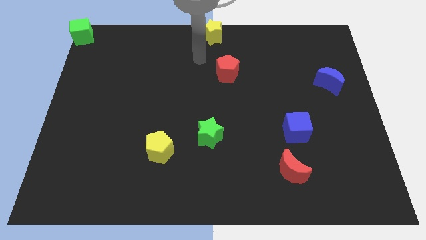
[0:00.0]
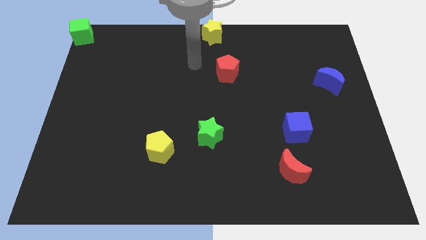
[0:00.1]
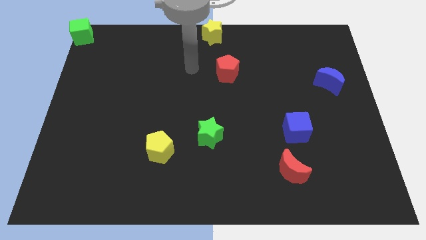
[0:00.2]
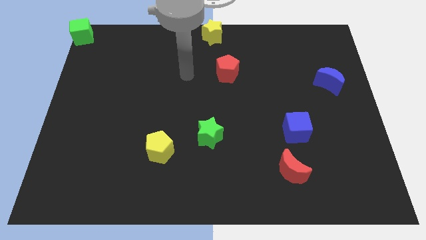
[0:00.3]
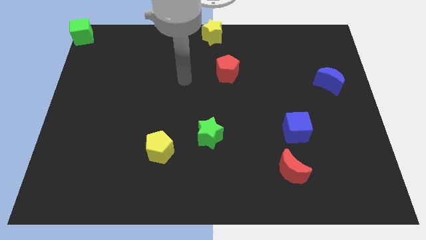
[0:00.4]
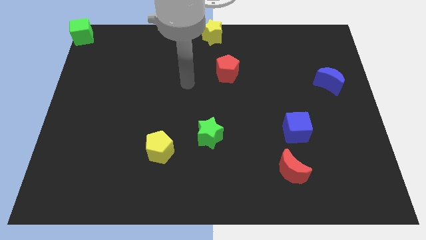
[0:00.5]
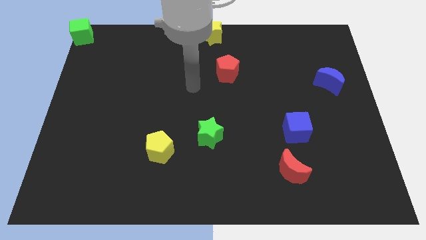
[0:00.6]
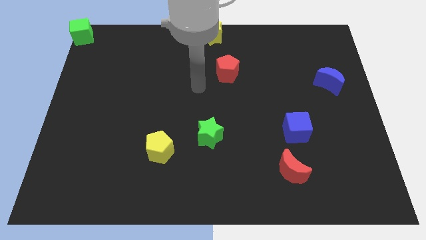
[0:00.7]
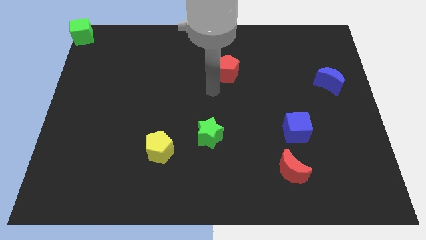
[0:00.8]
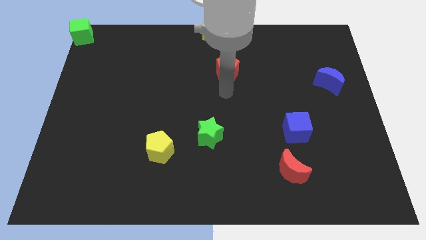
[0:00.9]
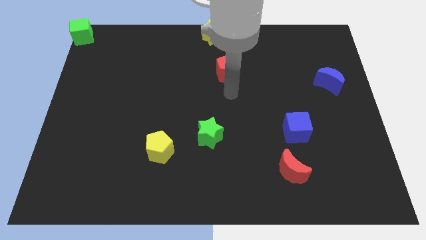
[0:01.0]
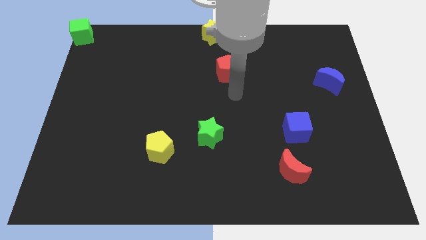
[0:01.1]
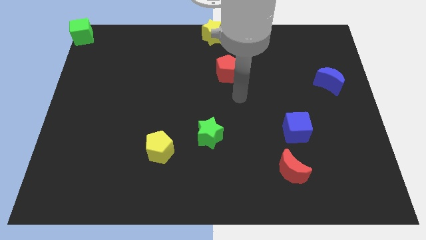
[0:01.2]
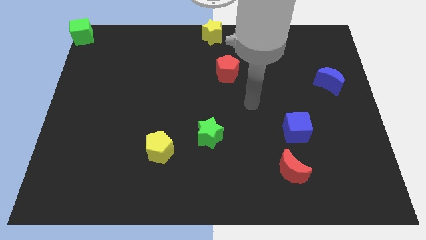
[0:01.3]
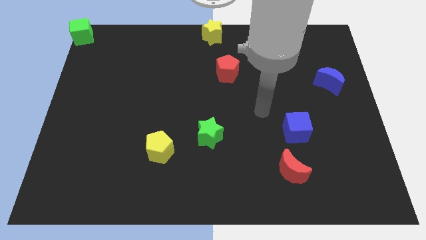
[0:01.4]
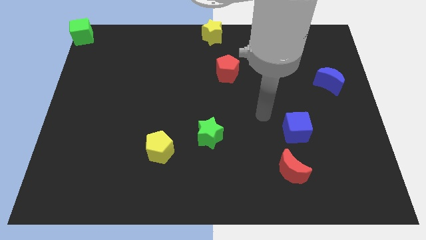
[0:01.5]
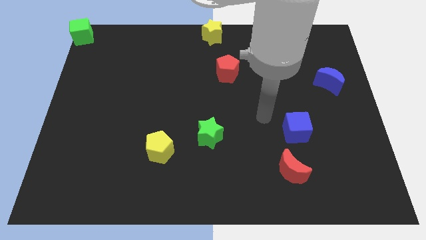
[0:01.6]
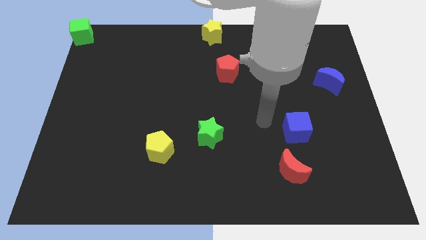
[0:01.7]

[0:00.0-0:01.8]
move the arm towards the blue cube

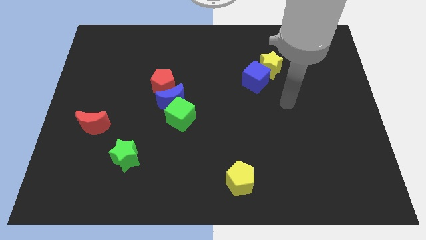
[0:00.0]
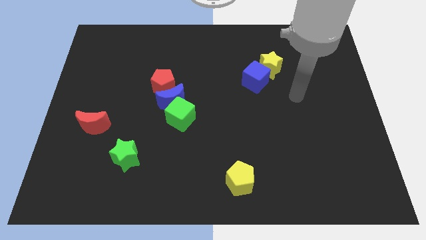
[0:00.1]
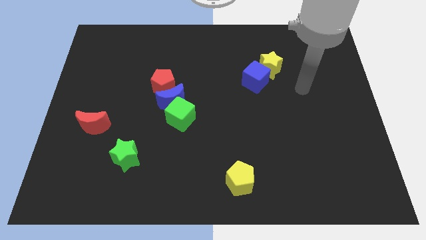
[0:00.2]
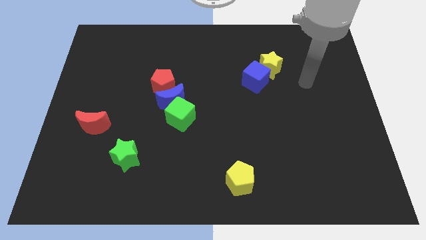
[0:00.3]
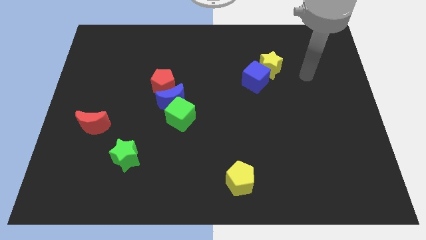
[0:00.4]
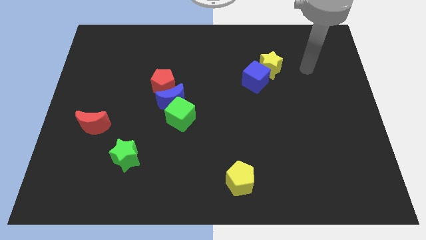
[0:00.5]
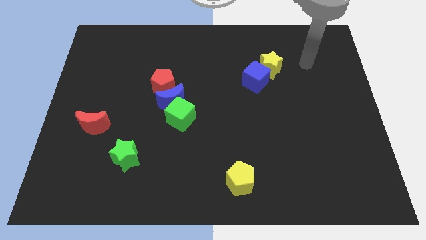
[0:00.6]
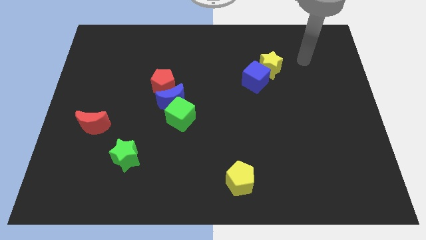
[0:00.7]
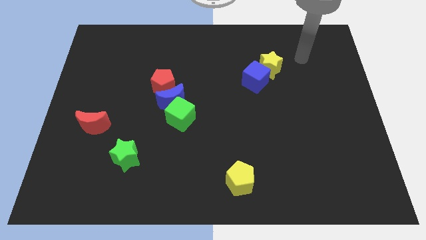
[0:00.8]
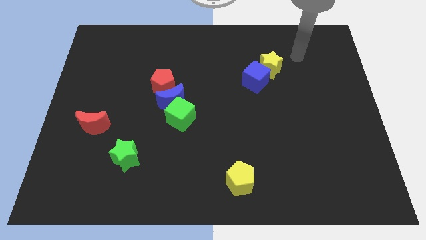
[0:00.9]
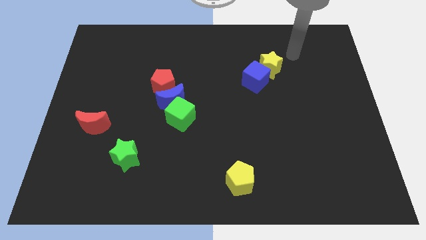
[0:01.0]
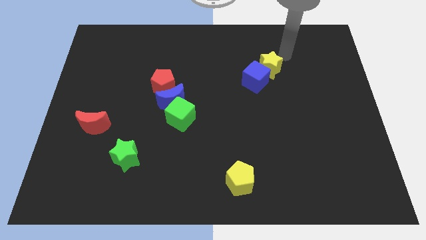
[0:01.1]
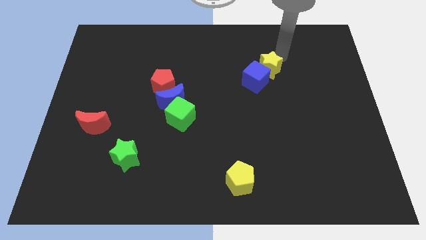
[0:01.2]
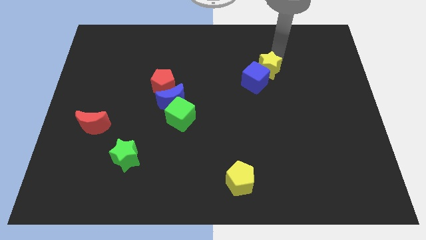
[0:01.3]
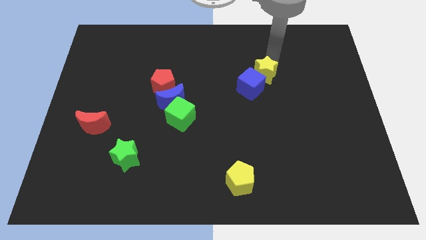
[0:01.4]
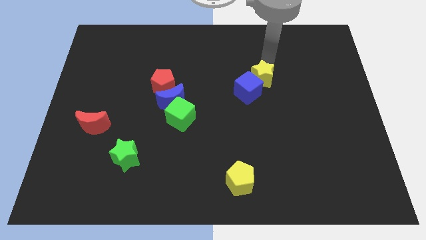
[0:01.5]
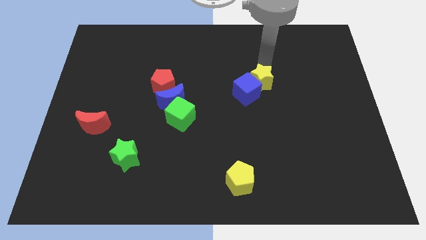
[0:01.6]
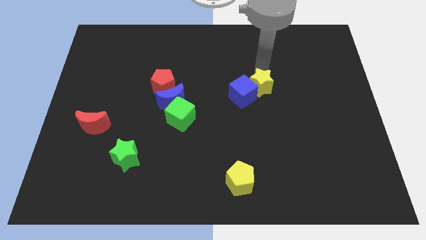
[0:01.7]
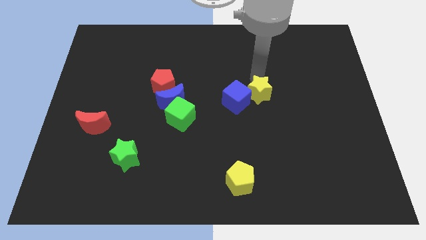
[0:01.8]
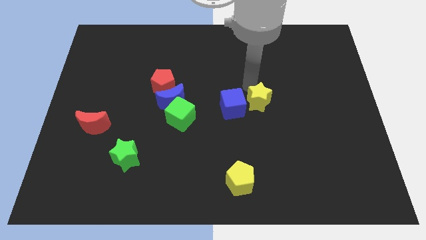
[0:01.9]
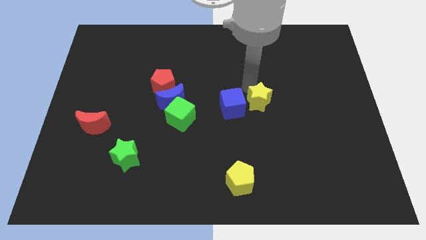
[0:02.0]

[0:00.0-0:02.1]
move the blue cube and yellow star to the center

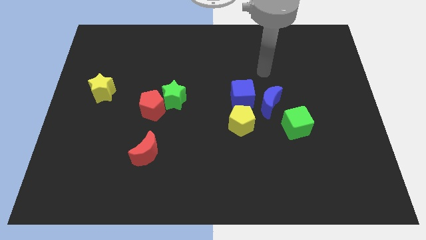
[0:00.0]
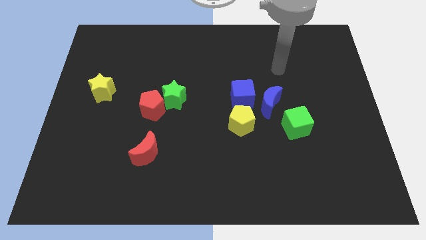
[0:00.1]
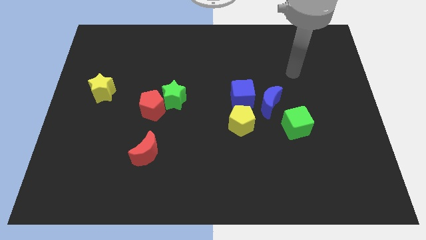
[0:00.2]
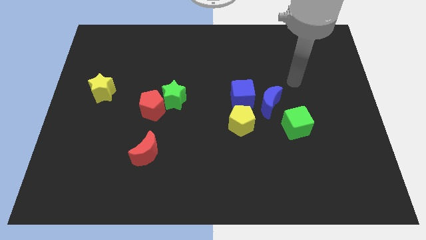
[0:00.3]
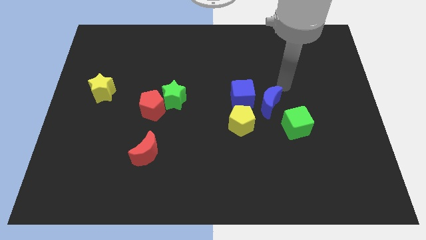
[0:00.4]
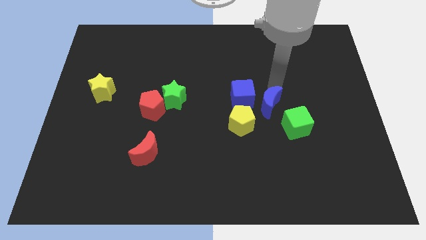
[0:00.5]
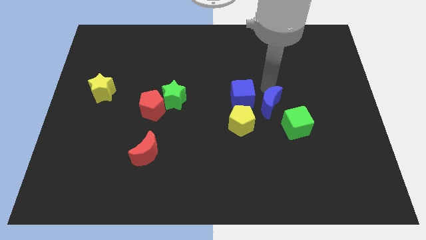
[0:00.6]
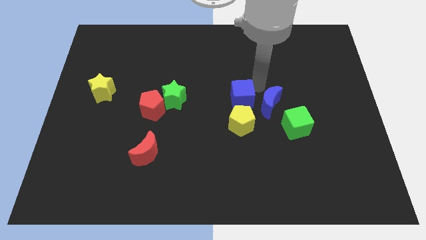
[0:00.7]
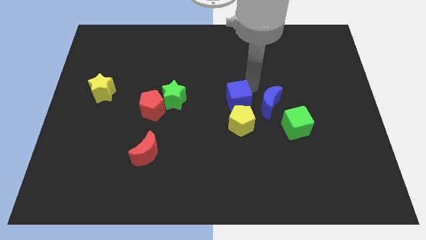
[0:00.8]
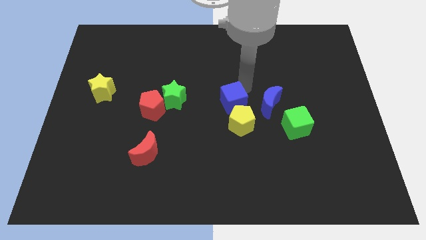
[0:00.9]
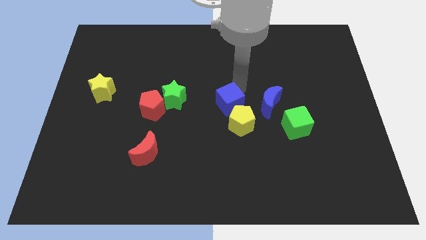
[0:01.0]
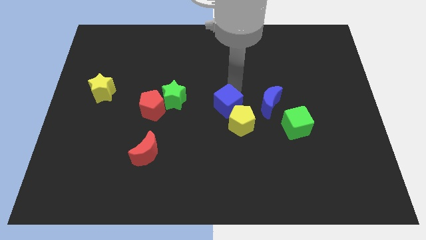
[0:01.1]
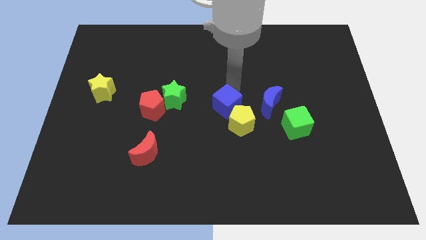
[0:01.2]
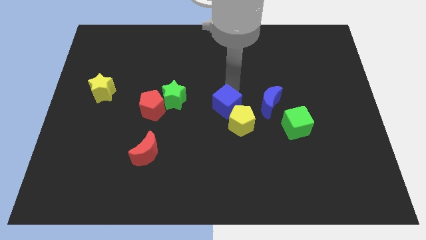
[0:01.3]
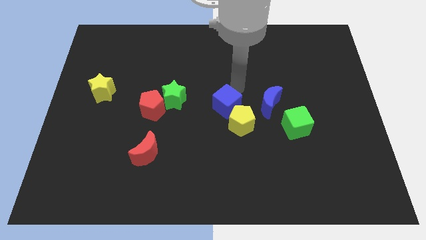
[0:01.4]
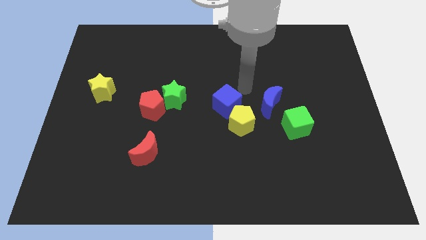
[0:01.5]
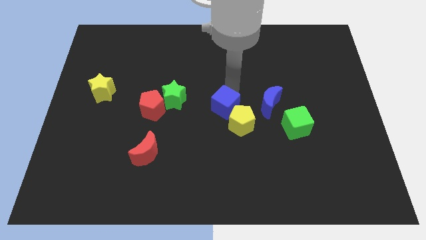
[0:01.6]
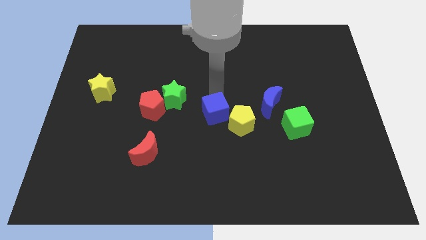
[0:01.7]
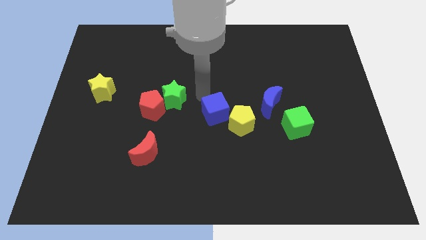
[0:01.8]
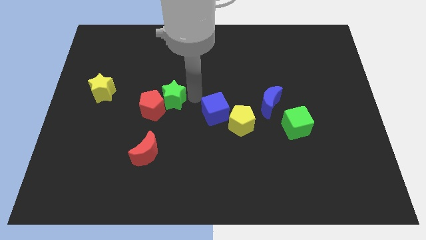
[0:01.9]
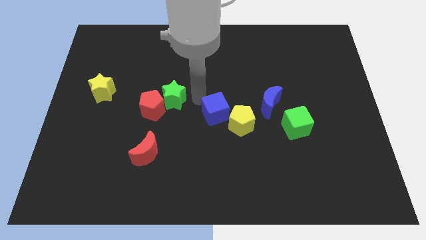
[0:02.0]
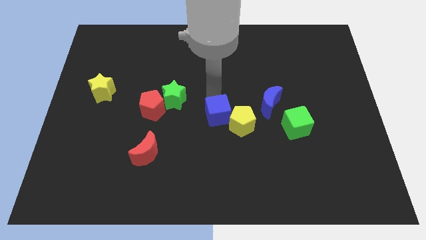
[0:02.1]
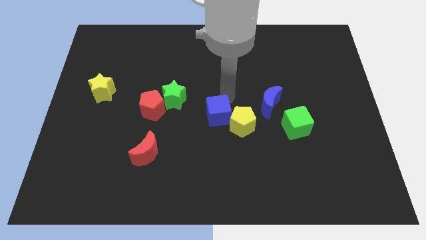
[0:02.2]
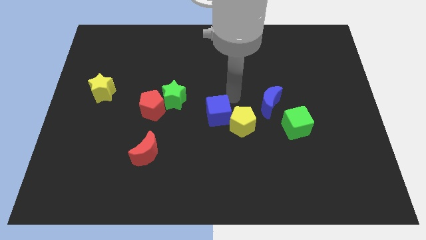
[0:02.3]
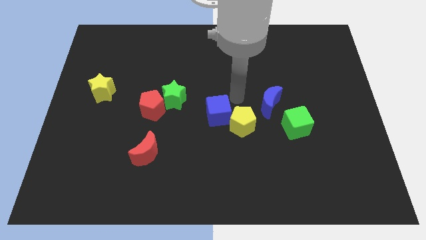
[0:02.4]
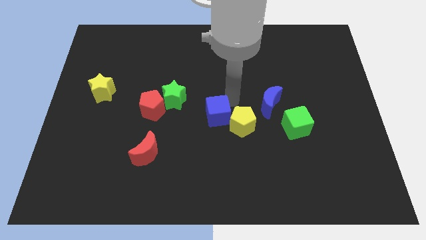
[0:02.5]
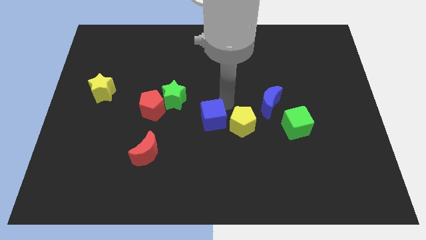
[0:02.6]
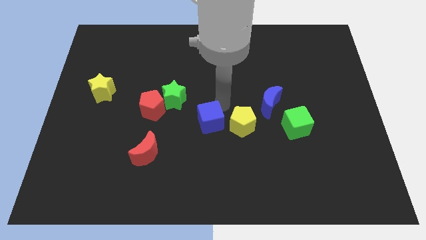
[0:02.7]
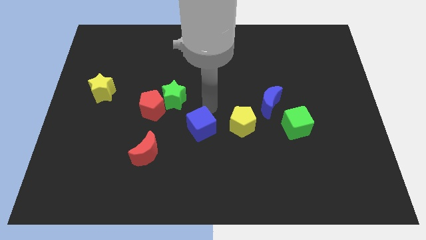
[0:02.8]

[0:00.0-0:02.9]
push blue cube beside yellow pentagon

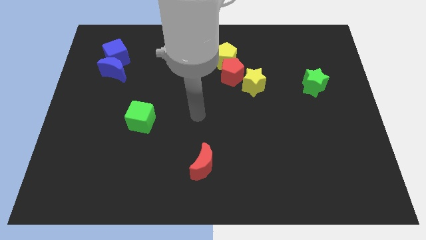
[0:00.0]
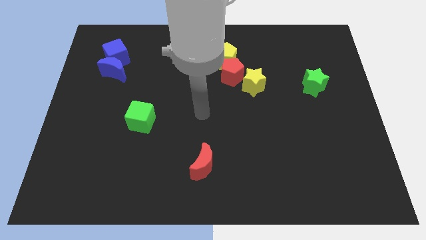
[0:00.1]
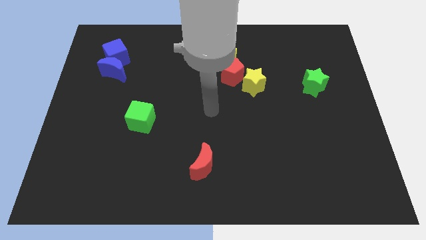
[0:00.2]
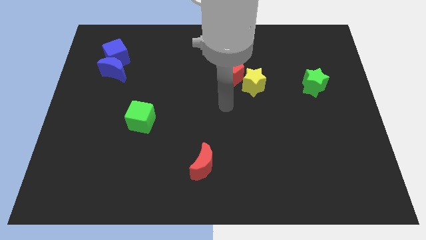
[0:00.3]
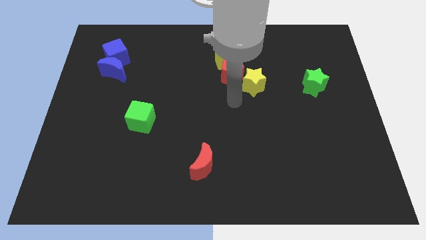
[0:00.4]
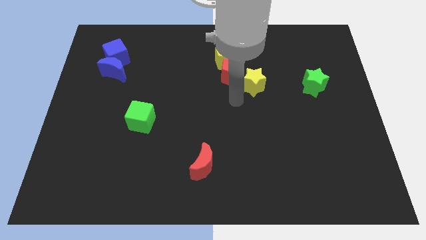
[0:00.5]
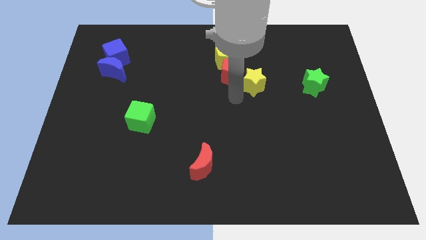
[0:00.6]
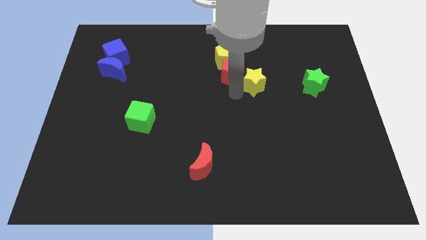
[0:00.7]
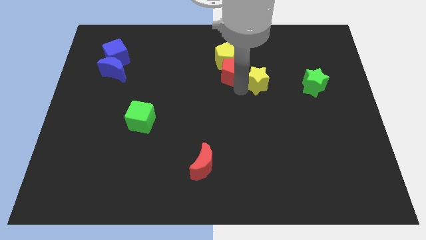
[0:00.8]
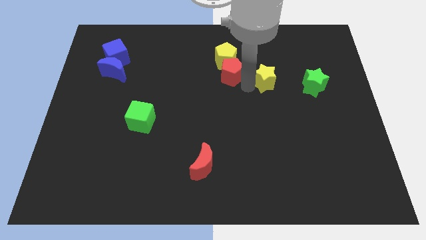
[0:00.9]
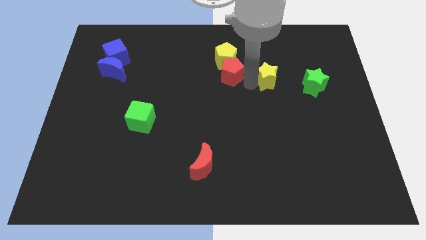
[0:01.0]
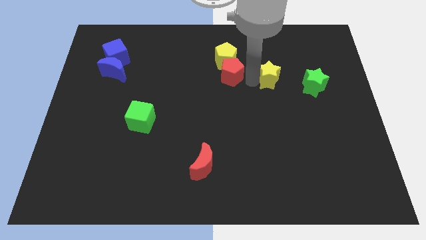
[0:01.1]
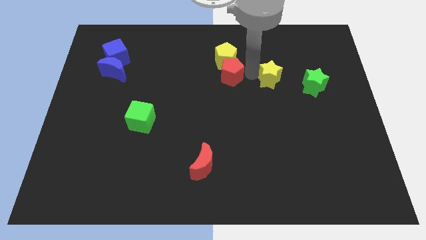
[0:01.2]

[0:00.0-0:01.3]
place your arm in between the red pentagon and the yellow star

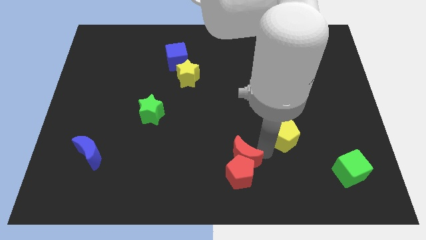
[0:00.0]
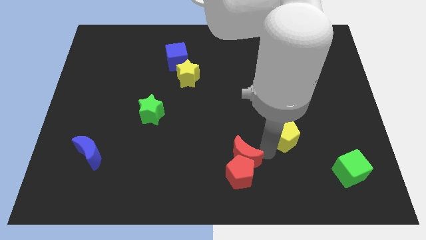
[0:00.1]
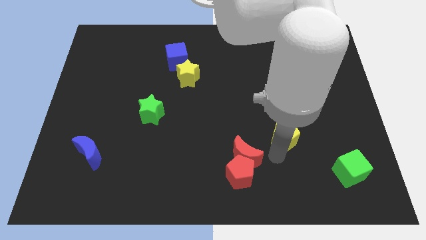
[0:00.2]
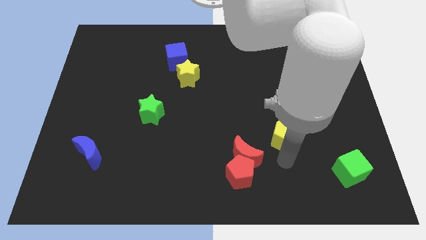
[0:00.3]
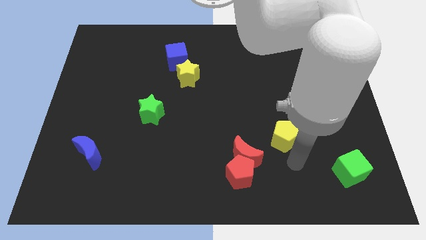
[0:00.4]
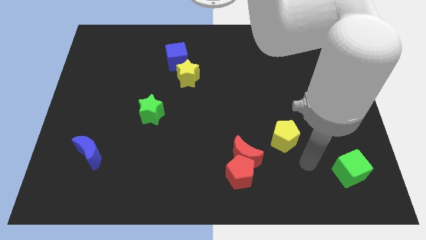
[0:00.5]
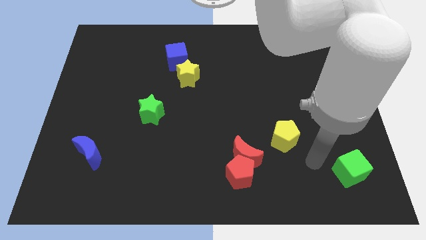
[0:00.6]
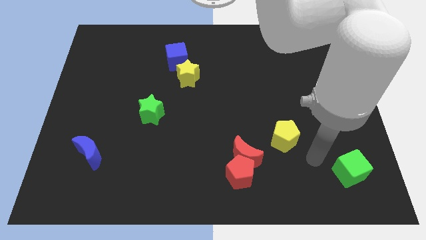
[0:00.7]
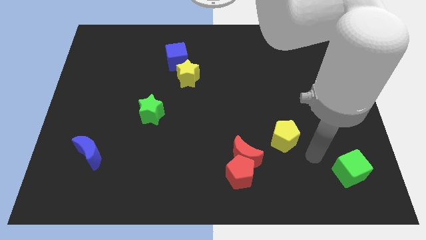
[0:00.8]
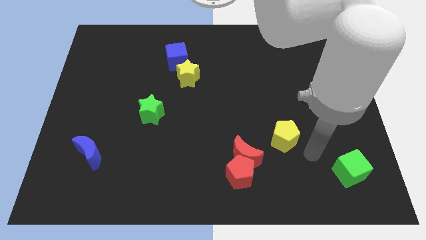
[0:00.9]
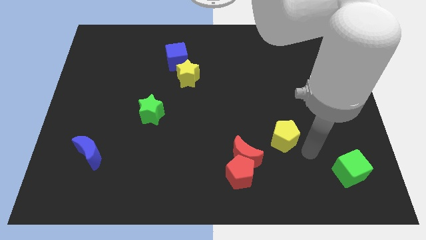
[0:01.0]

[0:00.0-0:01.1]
move your hand towards the right side of yellow pentagon
